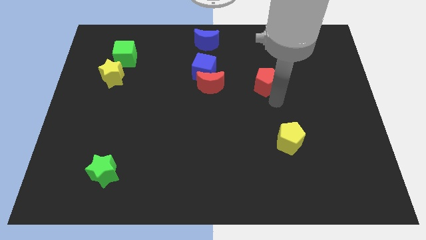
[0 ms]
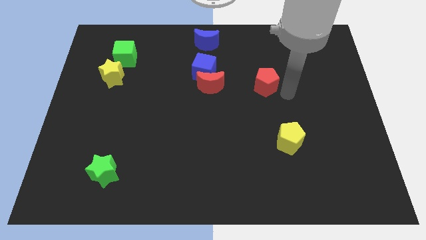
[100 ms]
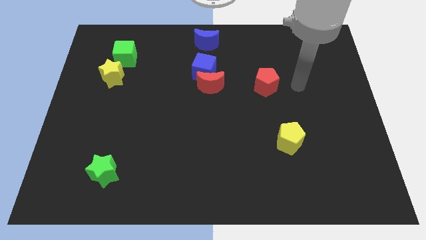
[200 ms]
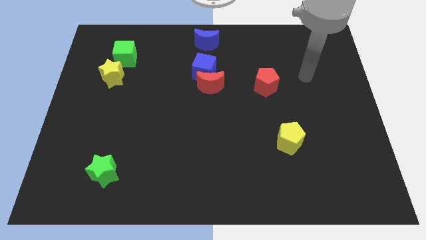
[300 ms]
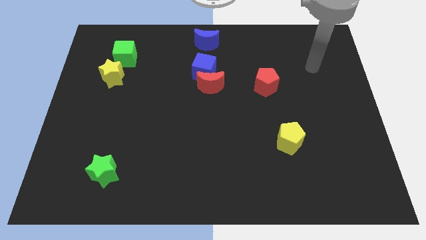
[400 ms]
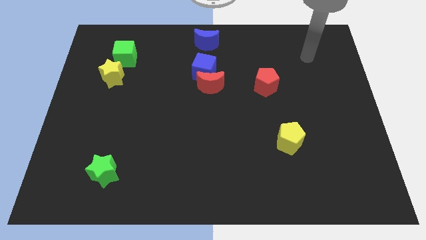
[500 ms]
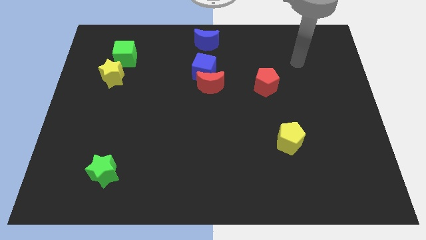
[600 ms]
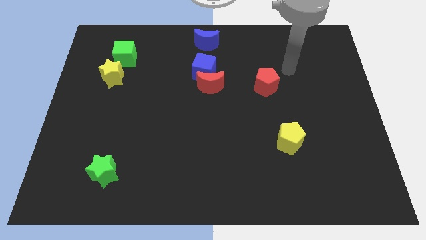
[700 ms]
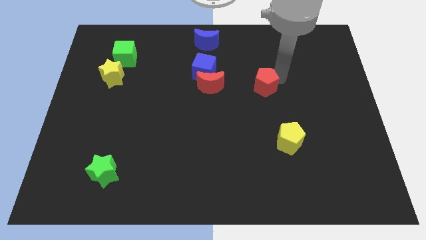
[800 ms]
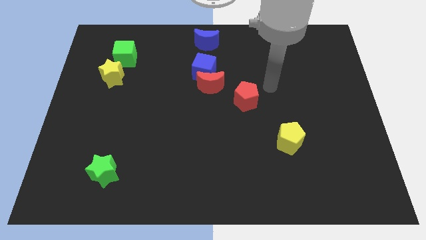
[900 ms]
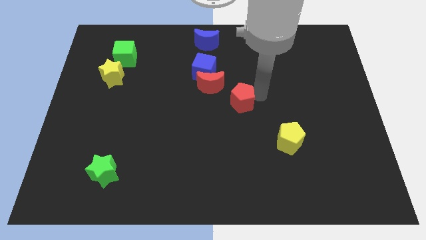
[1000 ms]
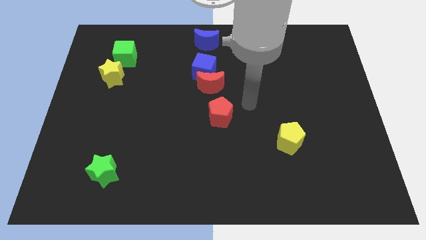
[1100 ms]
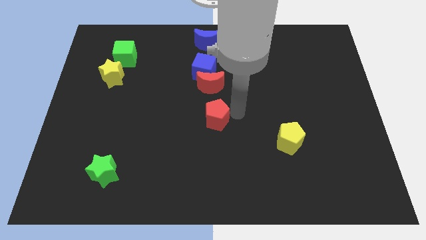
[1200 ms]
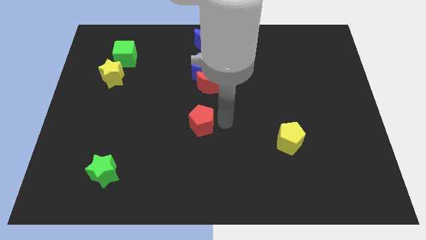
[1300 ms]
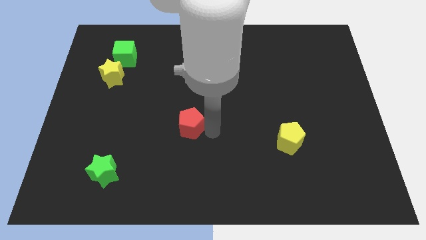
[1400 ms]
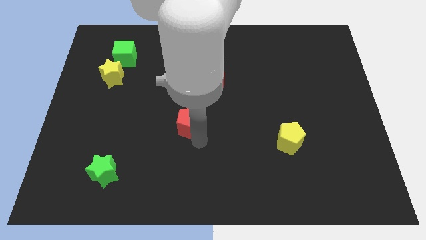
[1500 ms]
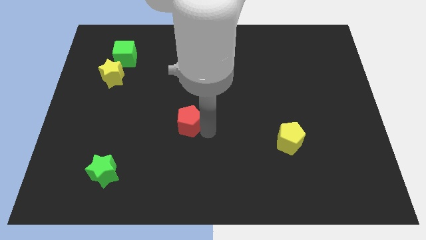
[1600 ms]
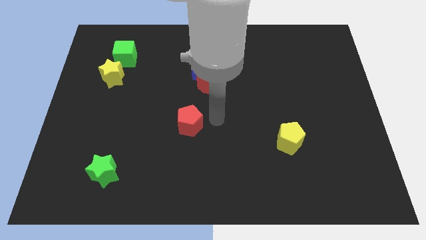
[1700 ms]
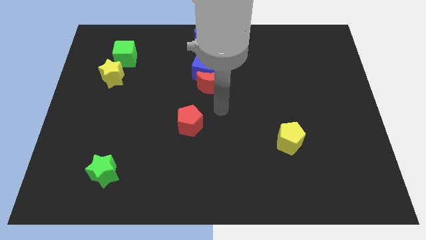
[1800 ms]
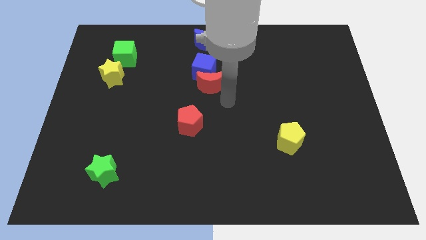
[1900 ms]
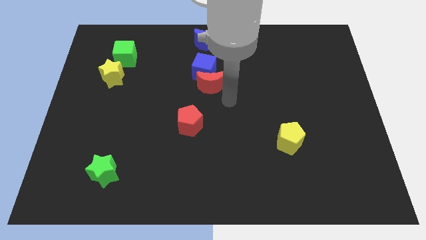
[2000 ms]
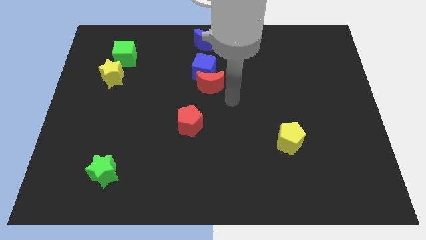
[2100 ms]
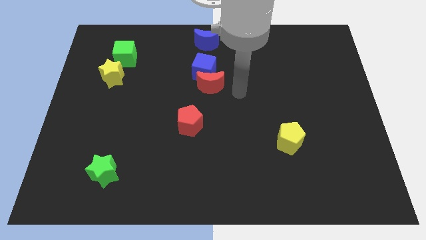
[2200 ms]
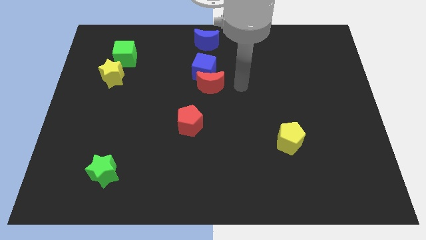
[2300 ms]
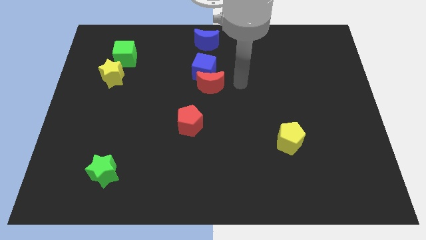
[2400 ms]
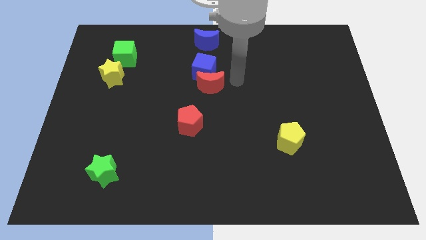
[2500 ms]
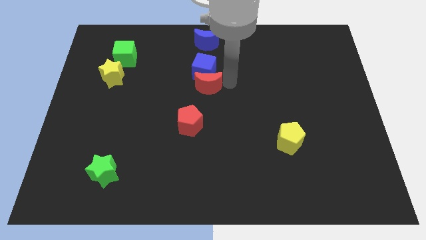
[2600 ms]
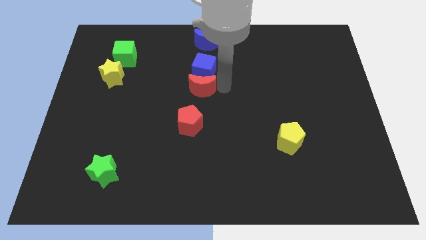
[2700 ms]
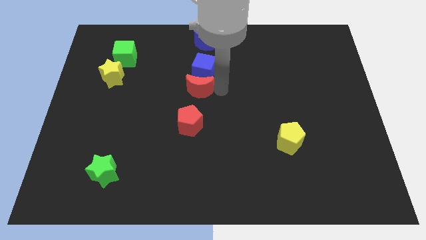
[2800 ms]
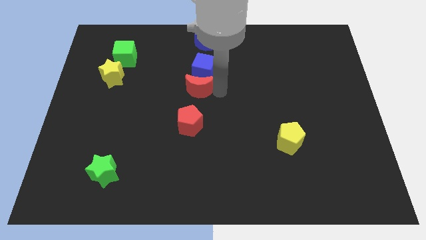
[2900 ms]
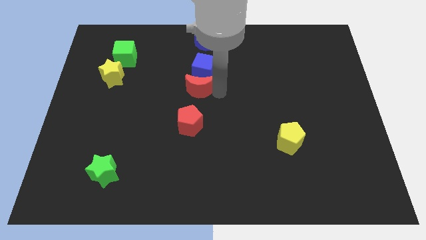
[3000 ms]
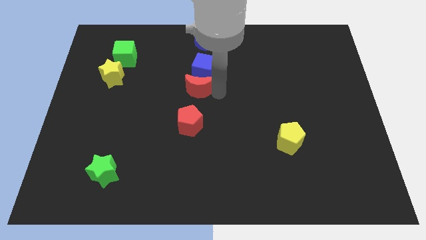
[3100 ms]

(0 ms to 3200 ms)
move the red pentagon to the bottom of the red moon

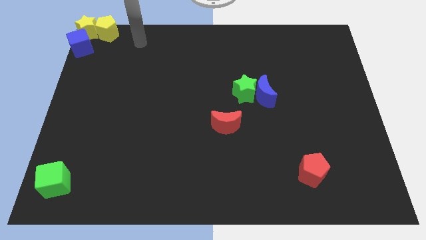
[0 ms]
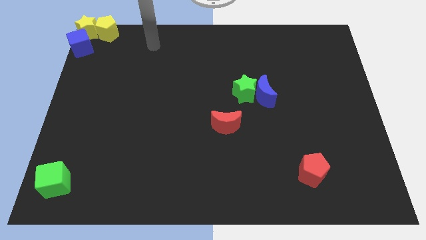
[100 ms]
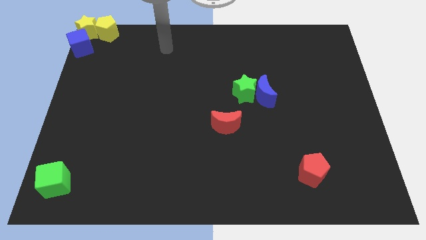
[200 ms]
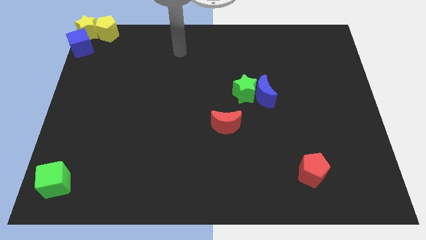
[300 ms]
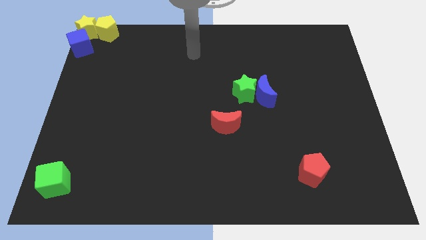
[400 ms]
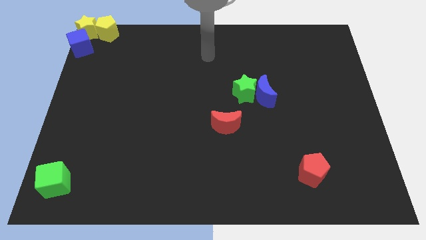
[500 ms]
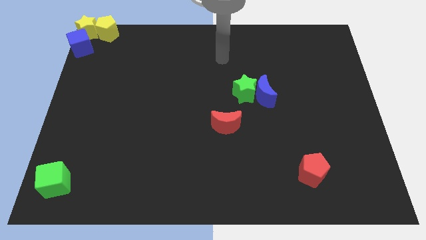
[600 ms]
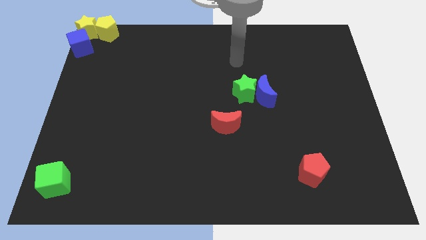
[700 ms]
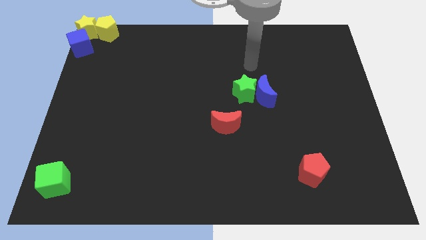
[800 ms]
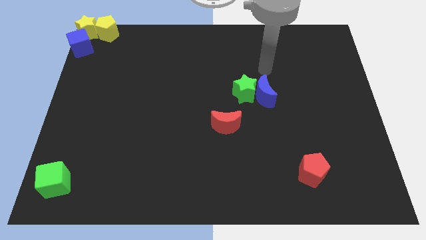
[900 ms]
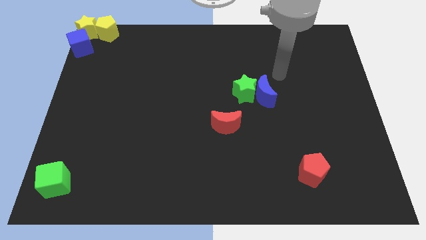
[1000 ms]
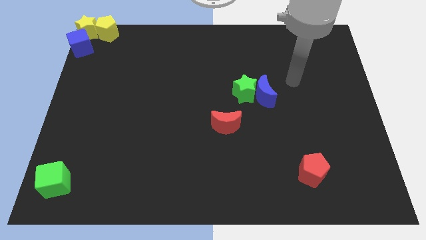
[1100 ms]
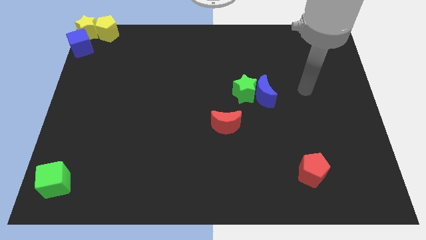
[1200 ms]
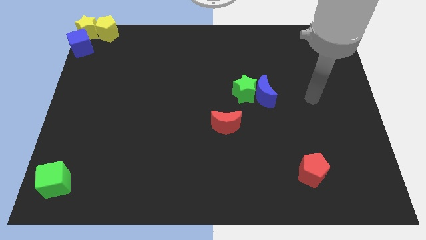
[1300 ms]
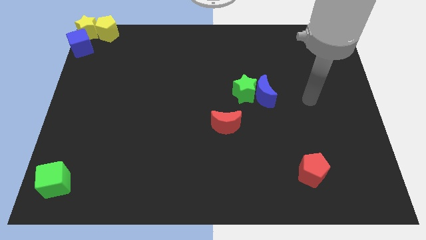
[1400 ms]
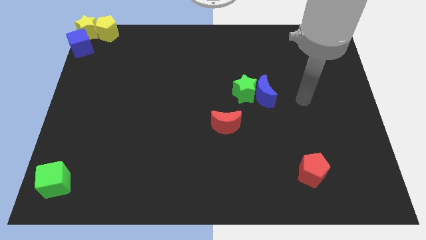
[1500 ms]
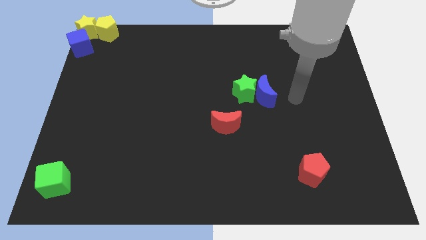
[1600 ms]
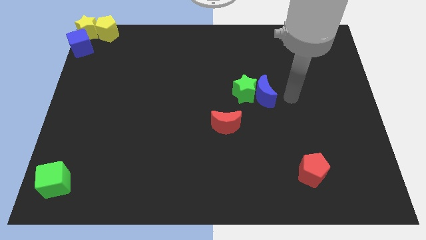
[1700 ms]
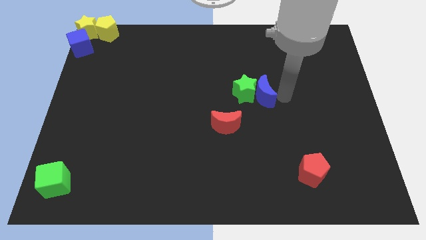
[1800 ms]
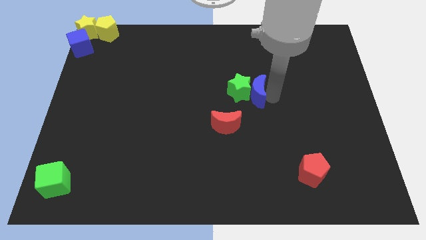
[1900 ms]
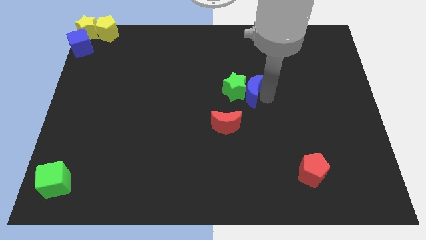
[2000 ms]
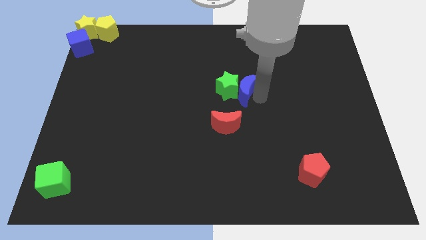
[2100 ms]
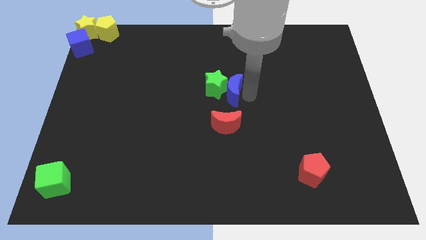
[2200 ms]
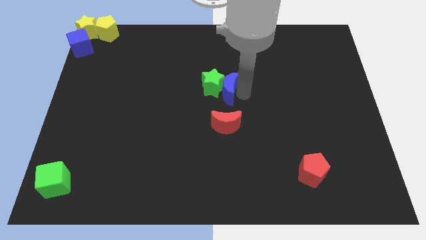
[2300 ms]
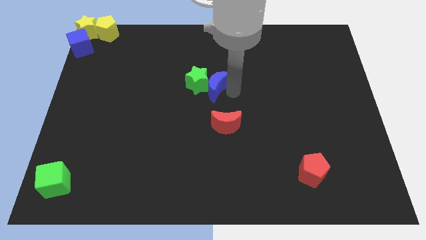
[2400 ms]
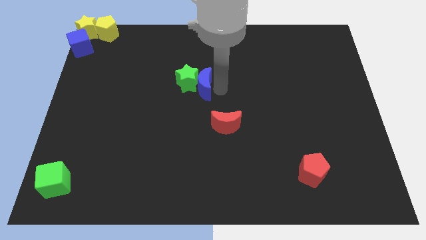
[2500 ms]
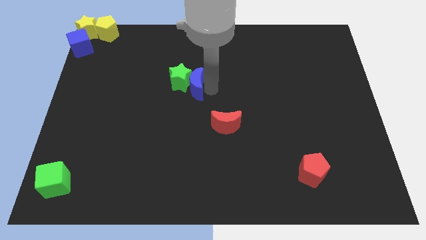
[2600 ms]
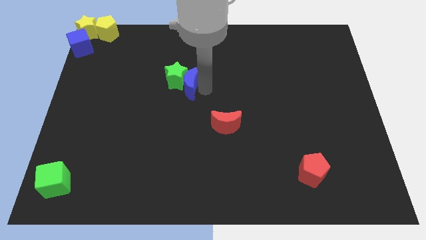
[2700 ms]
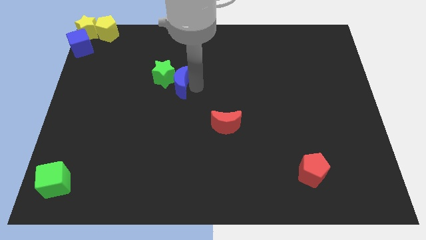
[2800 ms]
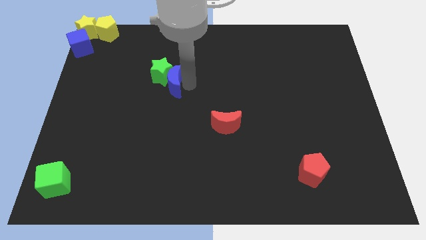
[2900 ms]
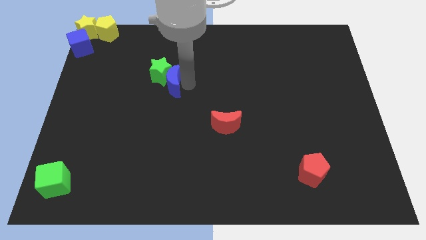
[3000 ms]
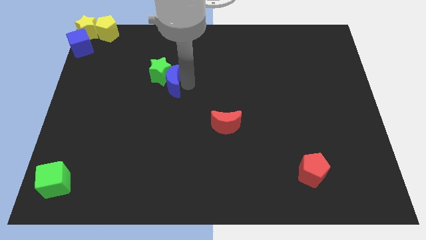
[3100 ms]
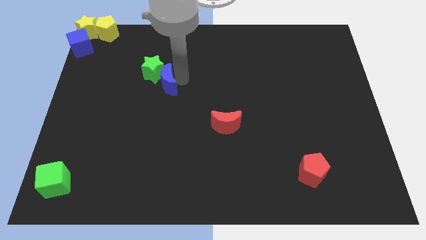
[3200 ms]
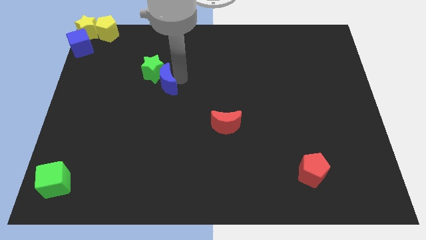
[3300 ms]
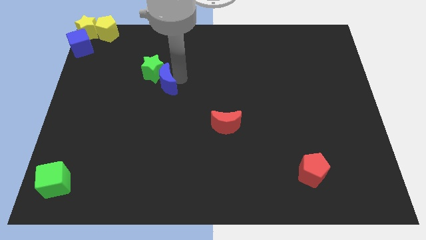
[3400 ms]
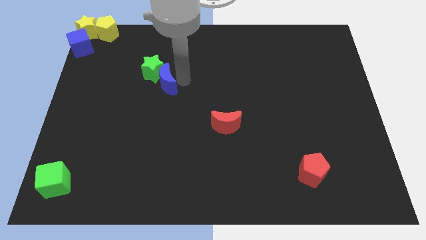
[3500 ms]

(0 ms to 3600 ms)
move the green star and the blue moon towards the group of blocks

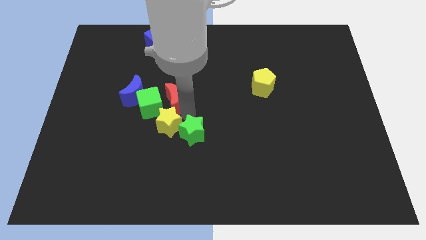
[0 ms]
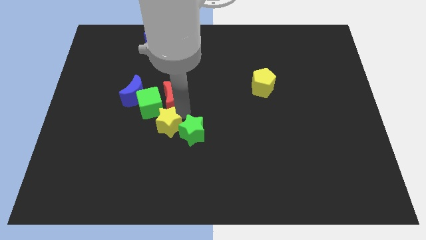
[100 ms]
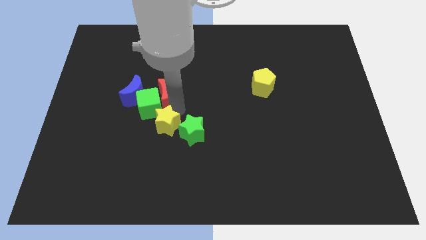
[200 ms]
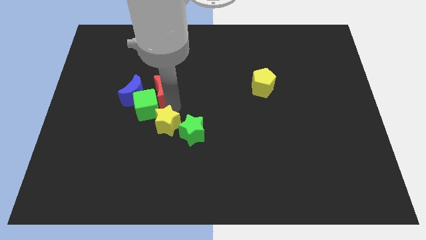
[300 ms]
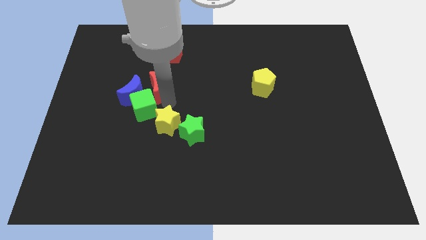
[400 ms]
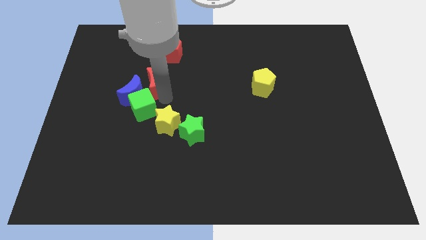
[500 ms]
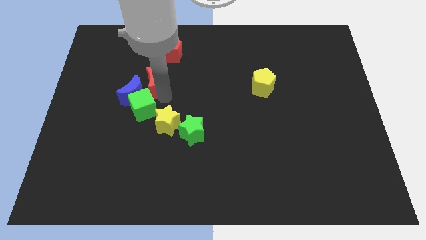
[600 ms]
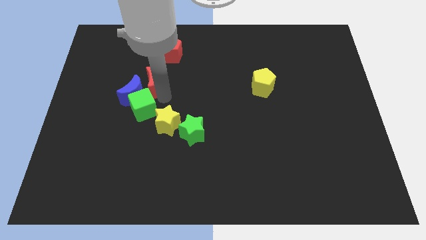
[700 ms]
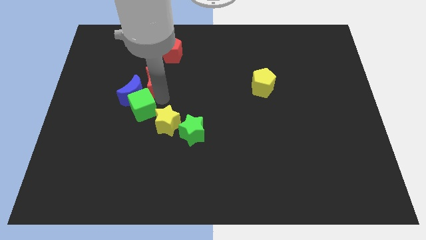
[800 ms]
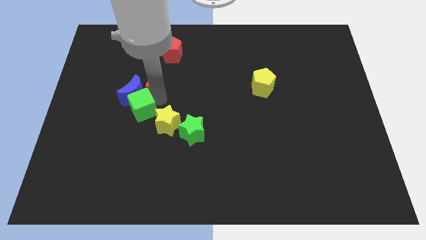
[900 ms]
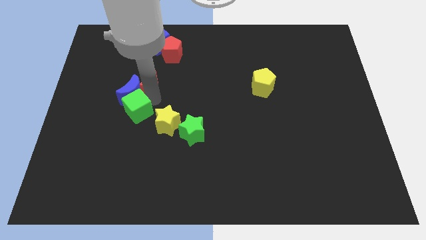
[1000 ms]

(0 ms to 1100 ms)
push the red crescent to the top of the green cube

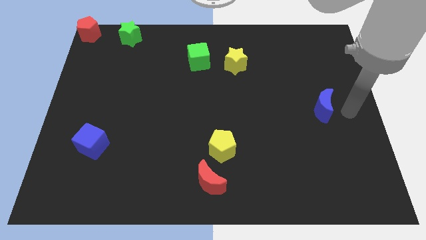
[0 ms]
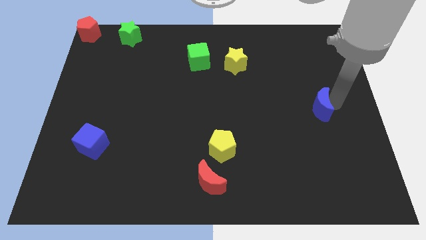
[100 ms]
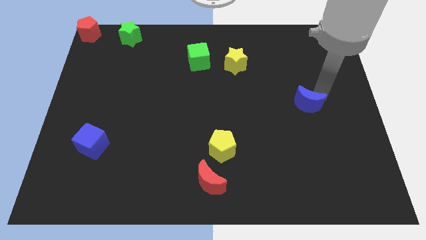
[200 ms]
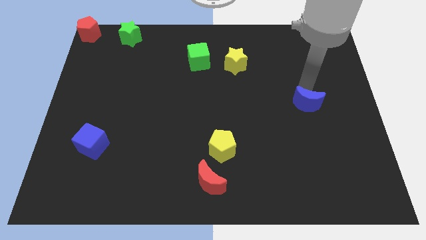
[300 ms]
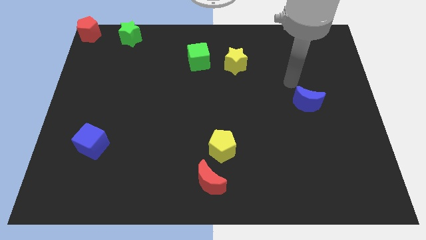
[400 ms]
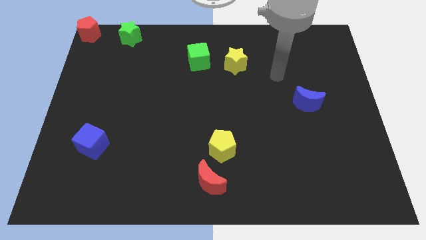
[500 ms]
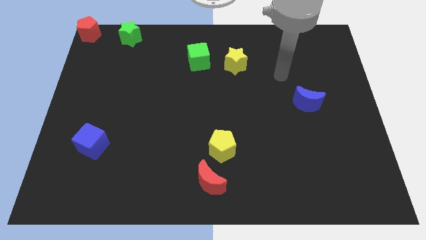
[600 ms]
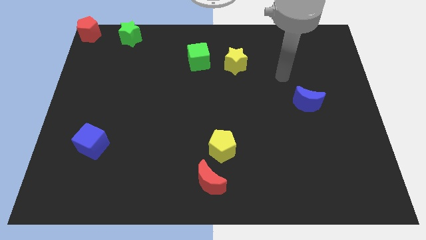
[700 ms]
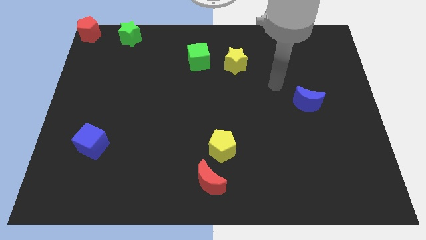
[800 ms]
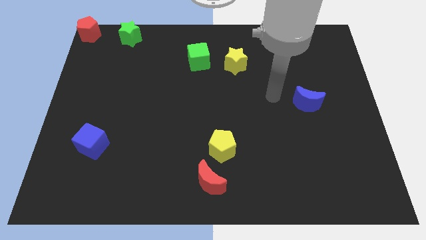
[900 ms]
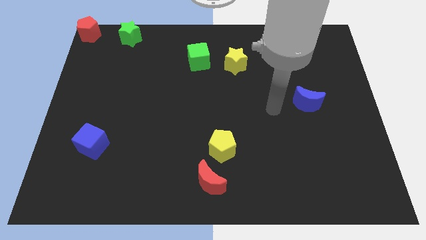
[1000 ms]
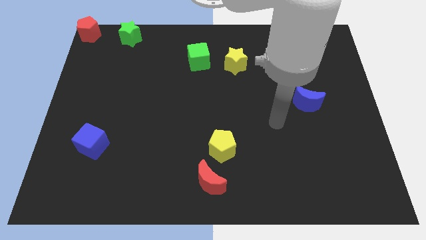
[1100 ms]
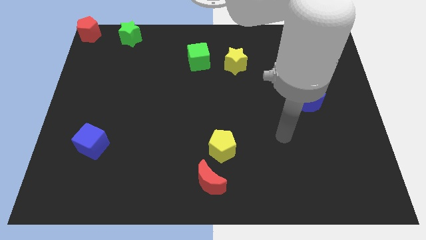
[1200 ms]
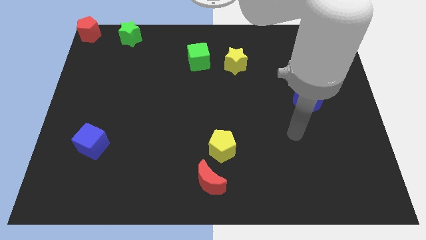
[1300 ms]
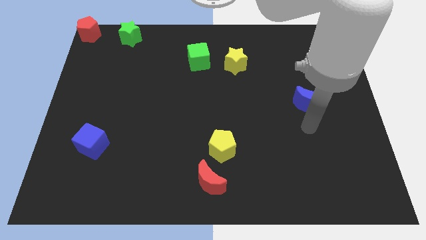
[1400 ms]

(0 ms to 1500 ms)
adjust the blue moon to the top side
